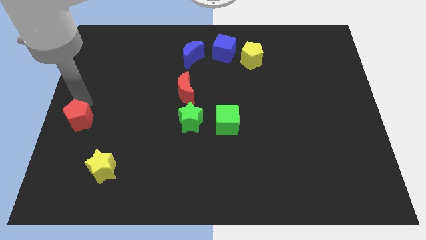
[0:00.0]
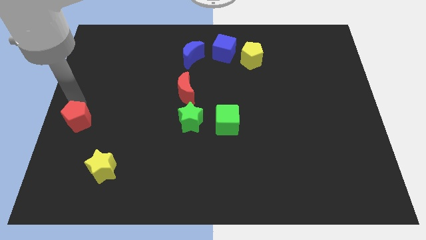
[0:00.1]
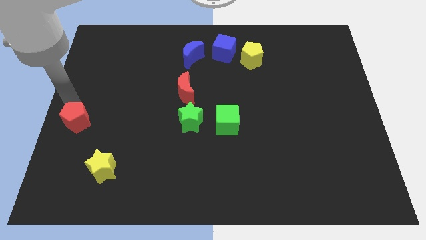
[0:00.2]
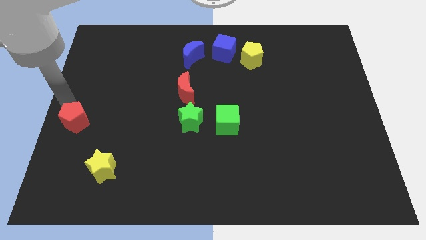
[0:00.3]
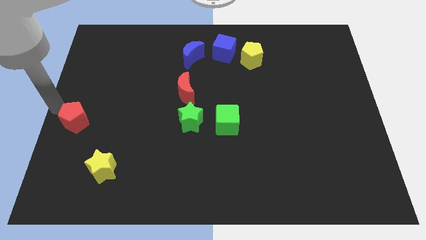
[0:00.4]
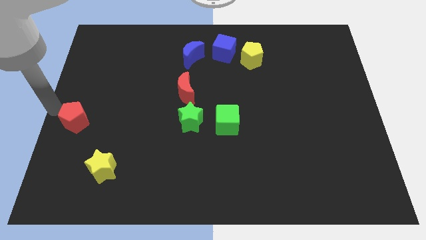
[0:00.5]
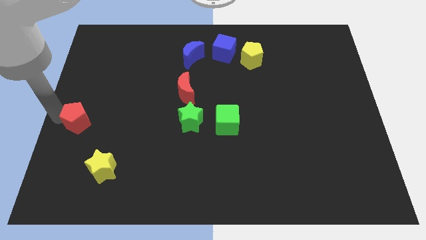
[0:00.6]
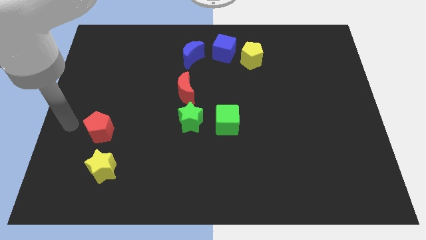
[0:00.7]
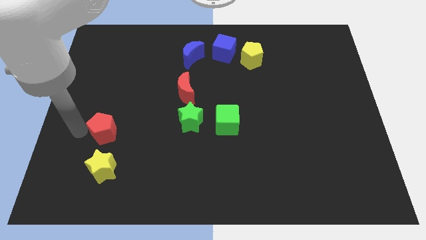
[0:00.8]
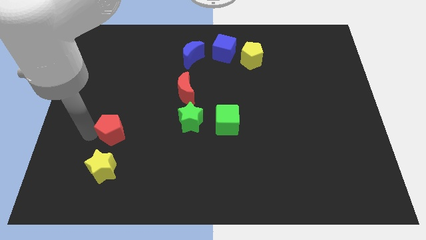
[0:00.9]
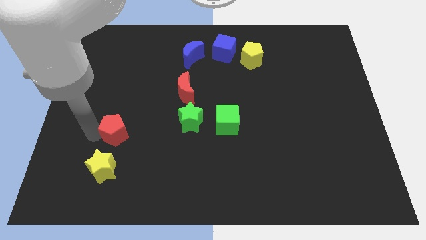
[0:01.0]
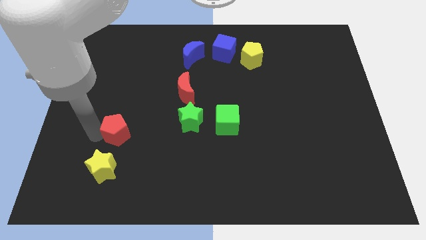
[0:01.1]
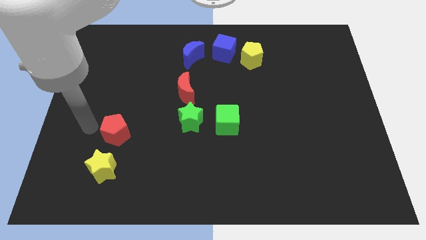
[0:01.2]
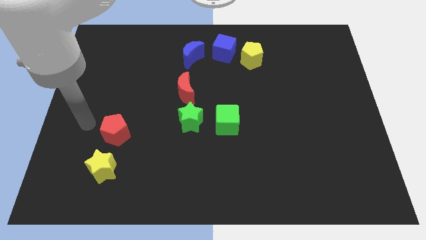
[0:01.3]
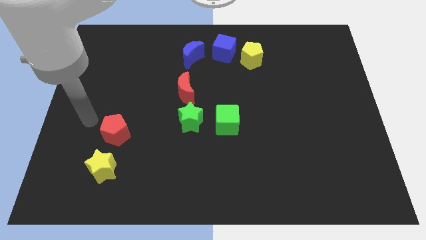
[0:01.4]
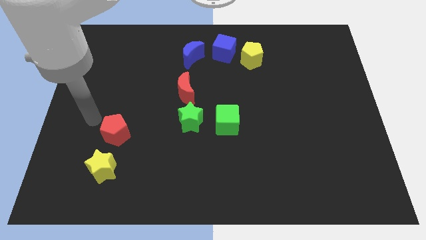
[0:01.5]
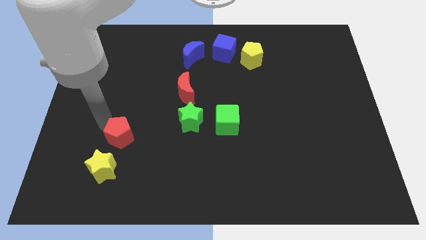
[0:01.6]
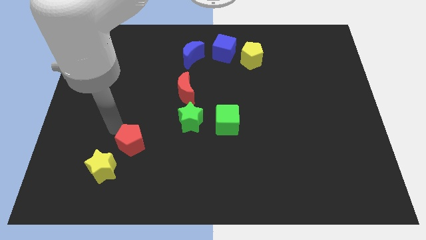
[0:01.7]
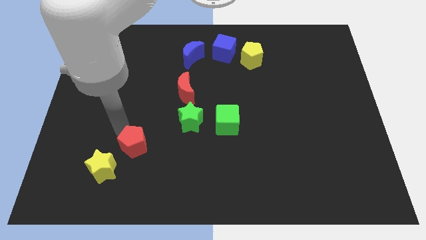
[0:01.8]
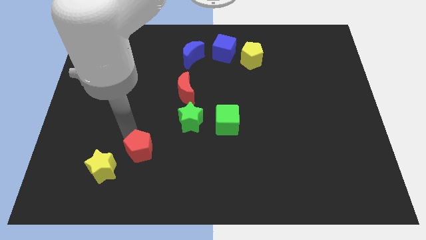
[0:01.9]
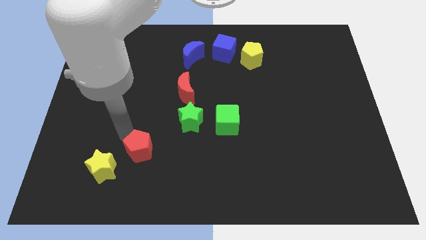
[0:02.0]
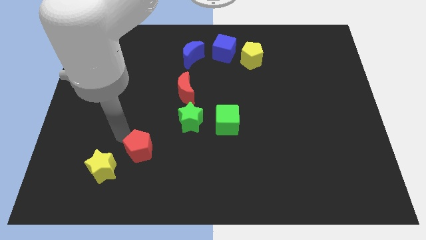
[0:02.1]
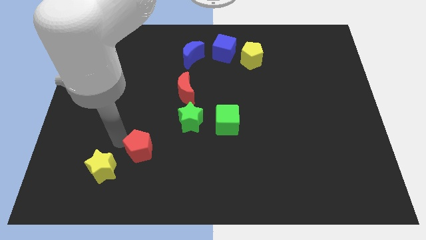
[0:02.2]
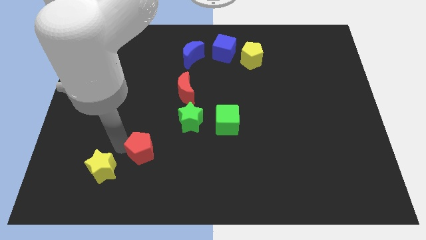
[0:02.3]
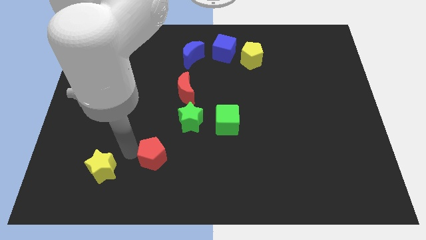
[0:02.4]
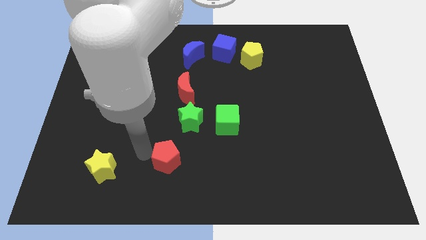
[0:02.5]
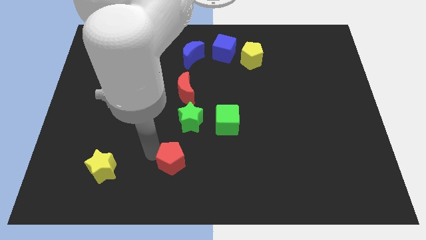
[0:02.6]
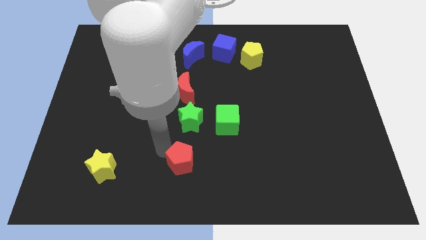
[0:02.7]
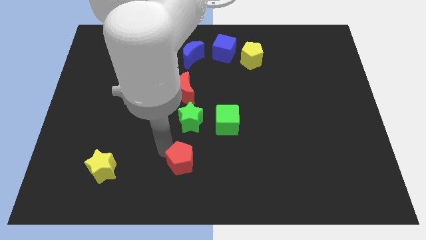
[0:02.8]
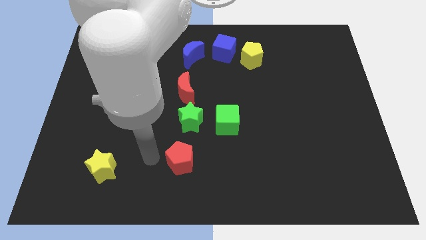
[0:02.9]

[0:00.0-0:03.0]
push red pentagon below green star

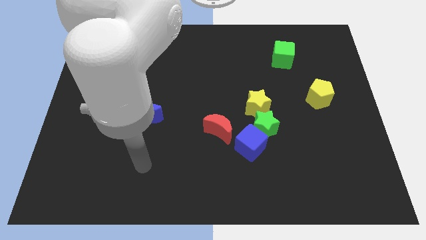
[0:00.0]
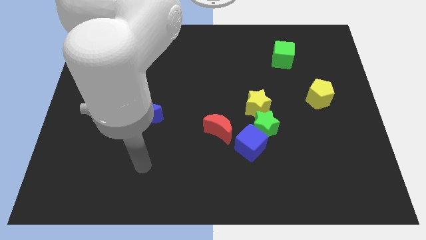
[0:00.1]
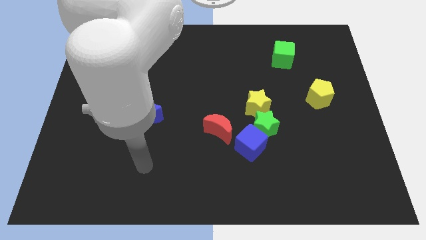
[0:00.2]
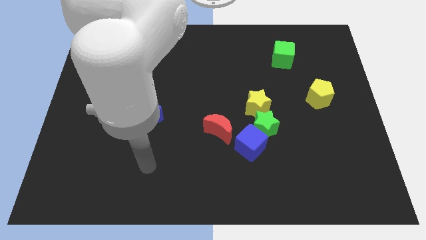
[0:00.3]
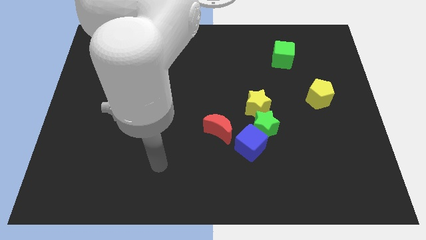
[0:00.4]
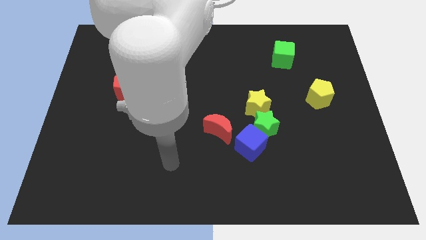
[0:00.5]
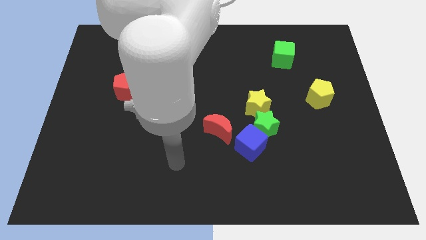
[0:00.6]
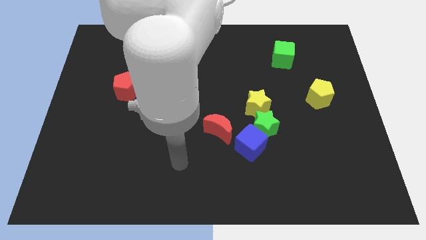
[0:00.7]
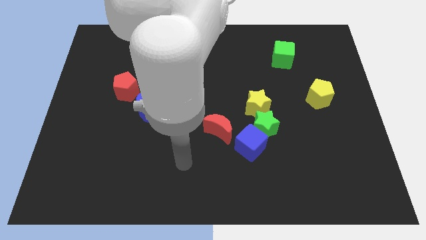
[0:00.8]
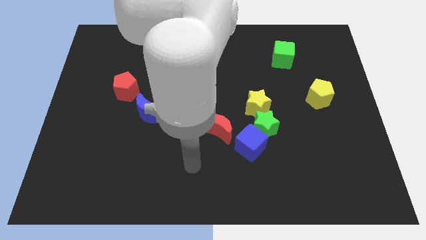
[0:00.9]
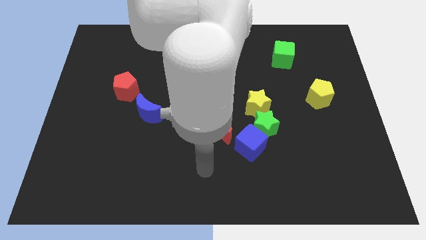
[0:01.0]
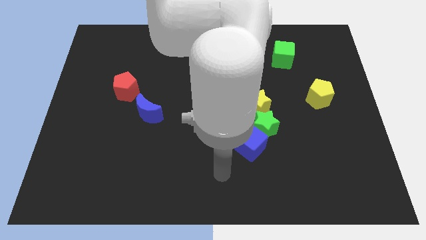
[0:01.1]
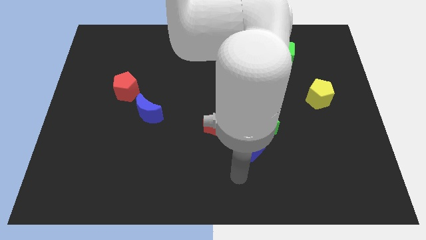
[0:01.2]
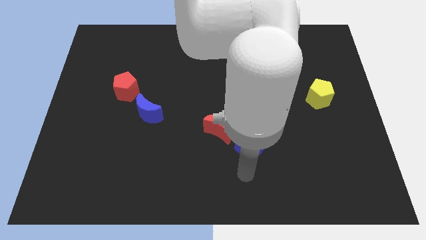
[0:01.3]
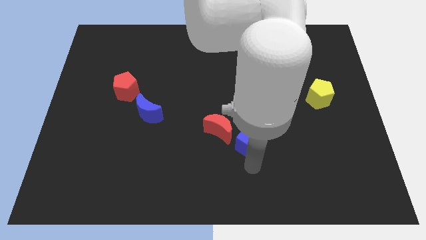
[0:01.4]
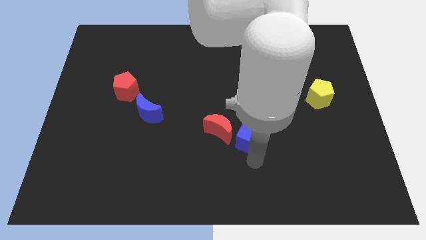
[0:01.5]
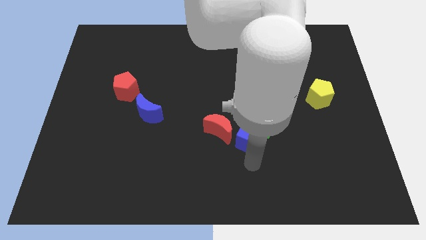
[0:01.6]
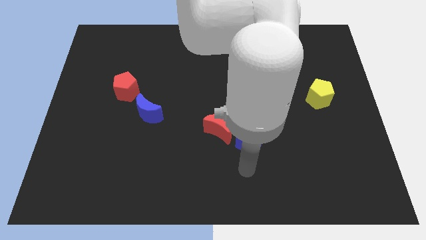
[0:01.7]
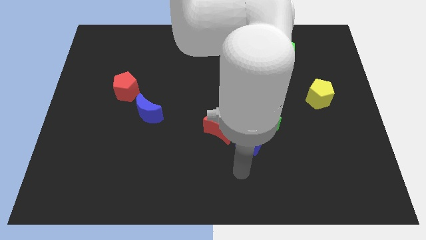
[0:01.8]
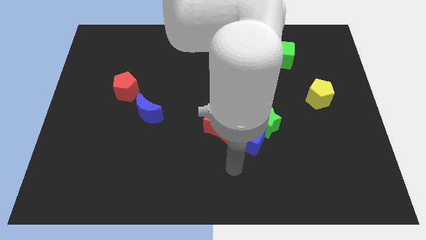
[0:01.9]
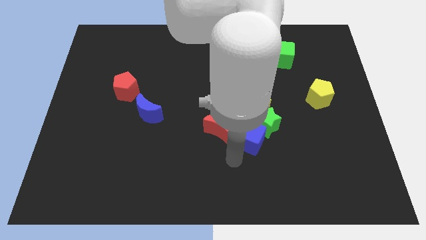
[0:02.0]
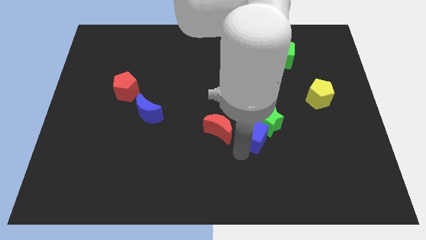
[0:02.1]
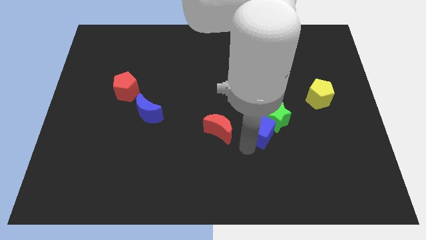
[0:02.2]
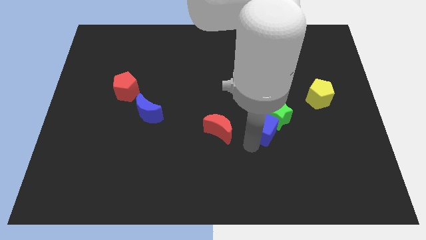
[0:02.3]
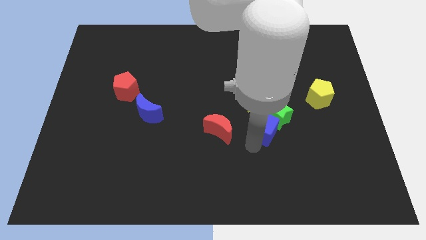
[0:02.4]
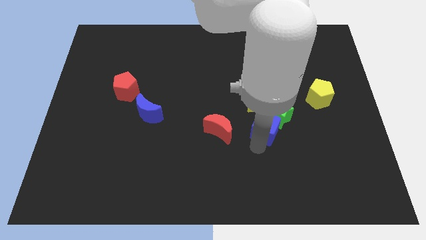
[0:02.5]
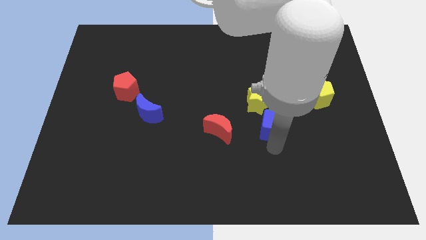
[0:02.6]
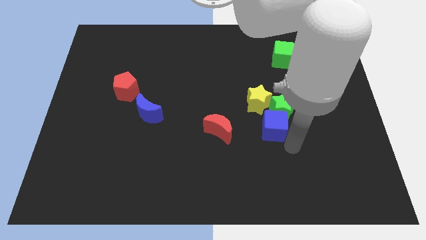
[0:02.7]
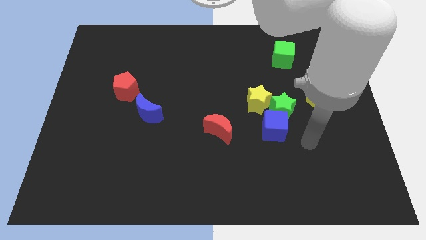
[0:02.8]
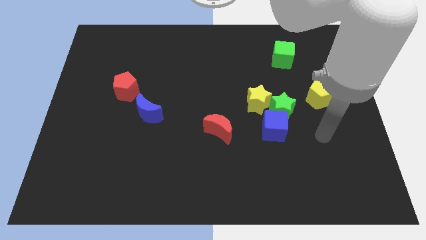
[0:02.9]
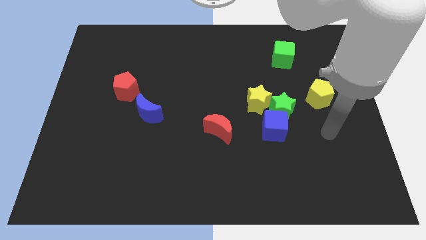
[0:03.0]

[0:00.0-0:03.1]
move the blue cube into green star

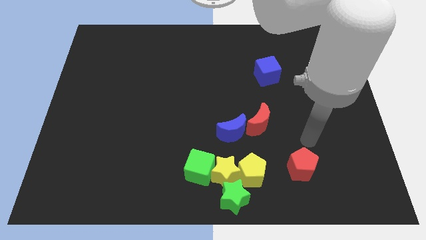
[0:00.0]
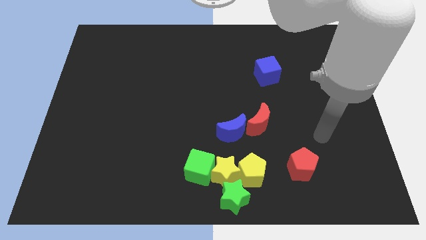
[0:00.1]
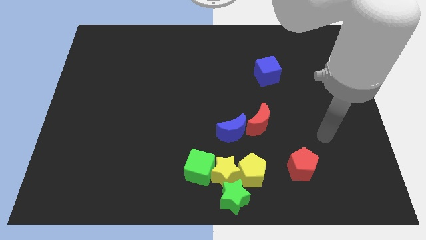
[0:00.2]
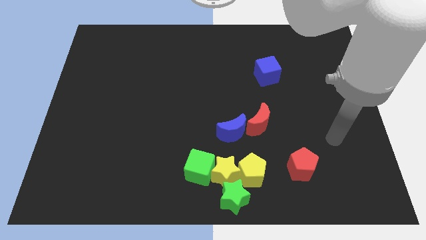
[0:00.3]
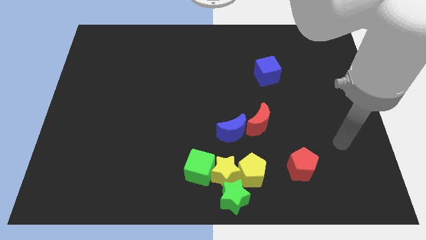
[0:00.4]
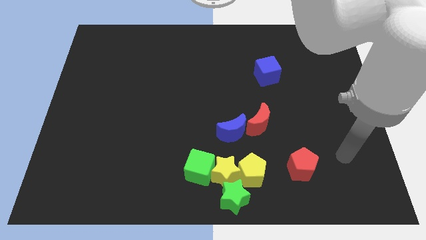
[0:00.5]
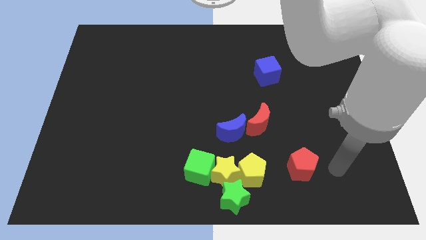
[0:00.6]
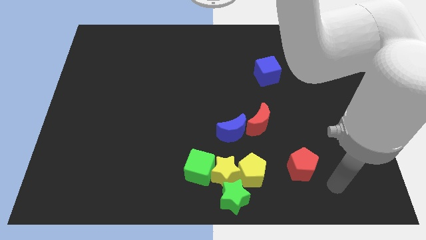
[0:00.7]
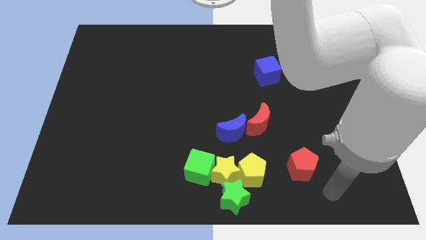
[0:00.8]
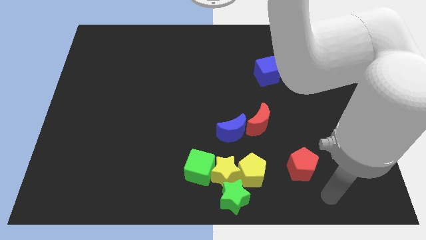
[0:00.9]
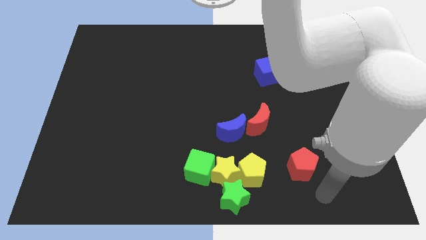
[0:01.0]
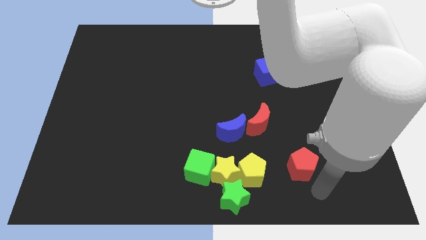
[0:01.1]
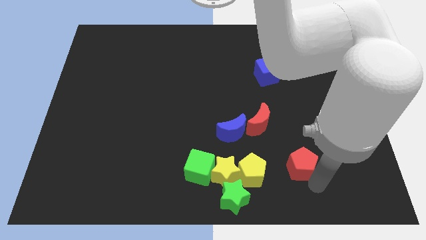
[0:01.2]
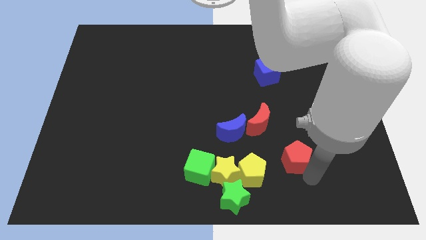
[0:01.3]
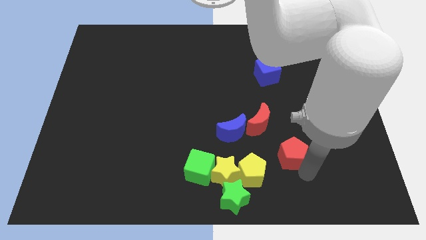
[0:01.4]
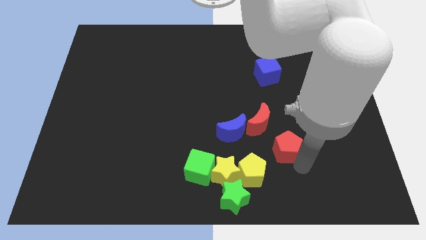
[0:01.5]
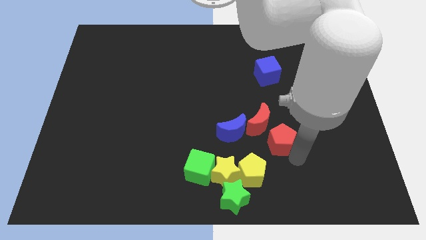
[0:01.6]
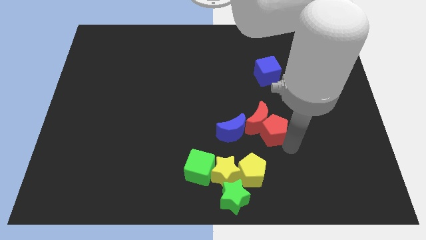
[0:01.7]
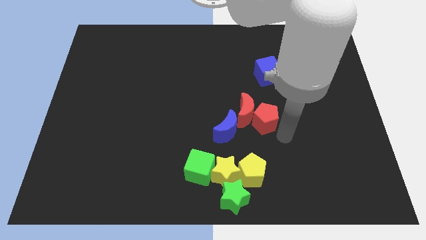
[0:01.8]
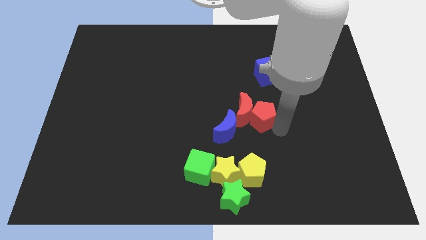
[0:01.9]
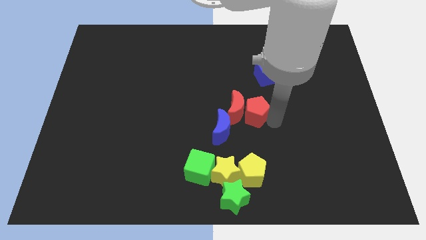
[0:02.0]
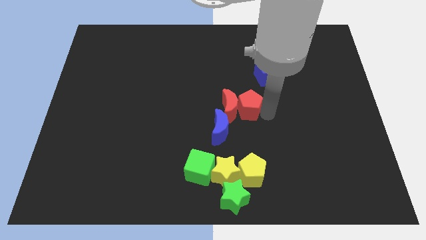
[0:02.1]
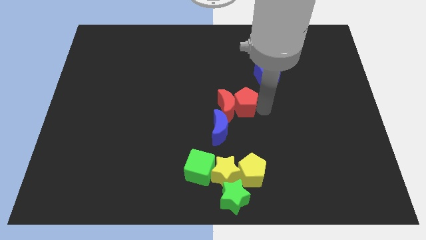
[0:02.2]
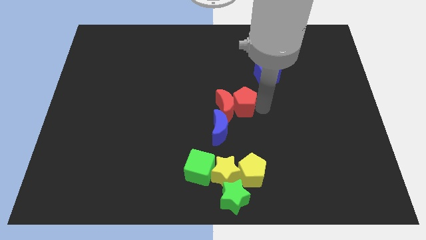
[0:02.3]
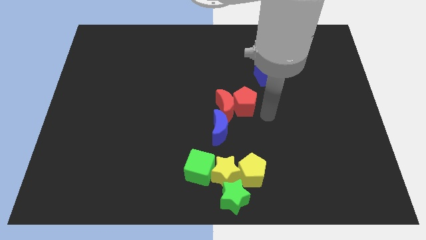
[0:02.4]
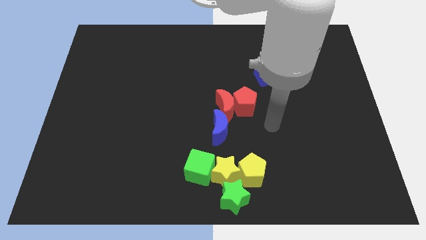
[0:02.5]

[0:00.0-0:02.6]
move red pentagon towards red moon

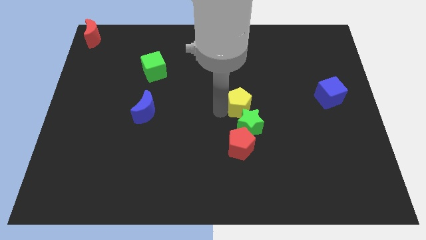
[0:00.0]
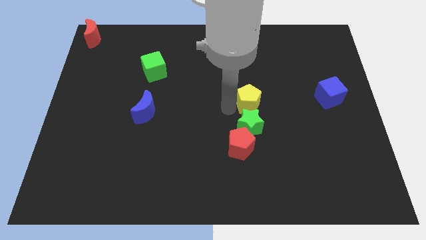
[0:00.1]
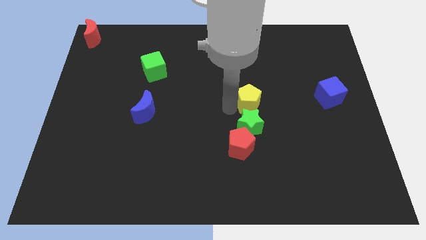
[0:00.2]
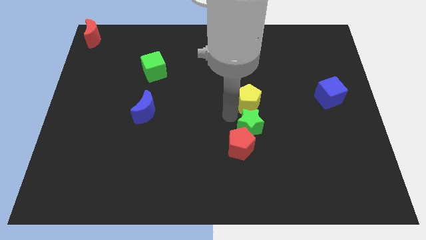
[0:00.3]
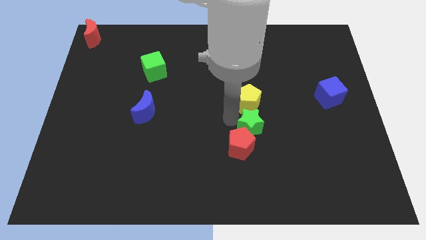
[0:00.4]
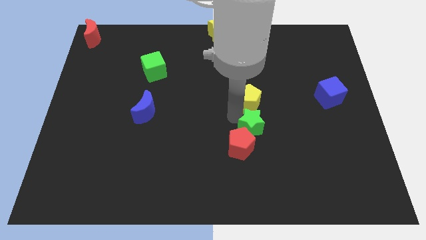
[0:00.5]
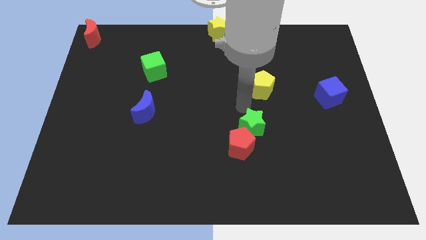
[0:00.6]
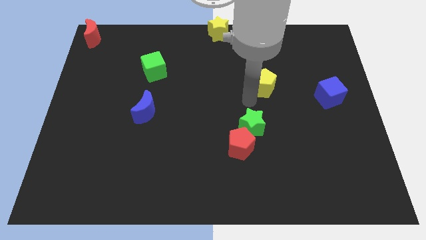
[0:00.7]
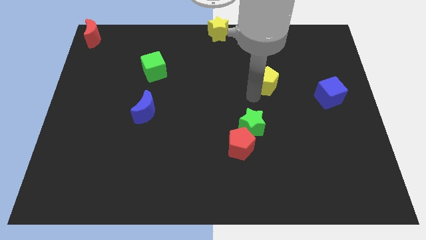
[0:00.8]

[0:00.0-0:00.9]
separate yellow pentagon from green star
